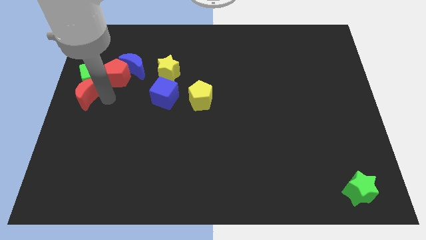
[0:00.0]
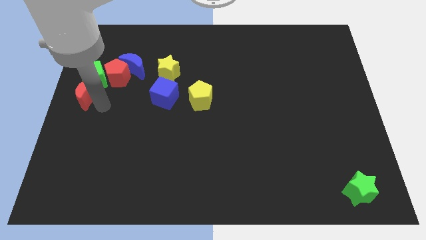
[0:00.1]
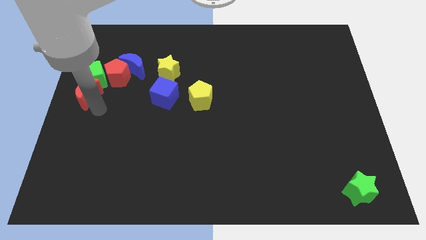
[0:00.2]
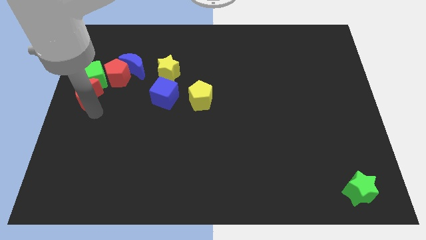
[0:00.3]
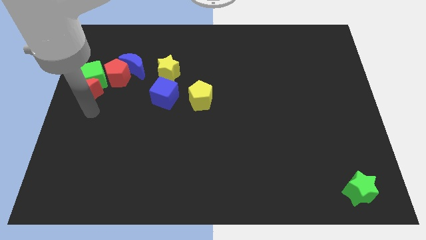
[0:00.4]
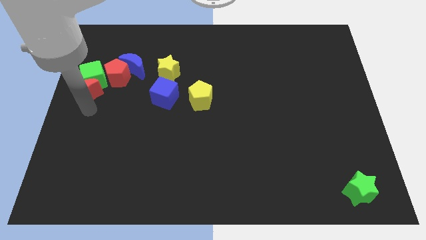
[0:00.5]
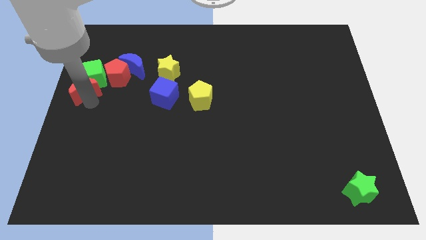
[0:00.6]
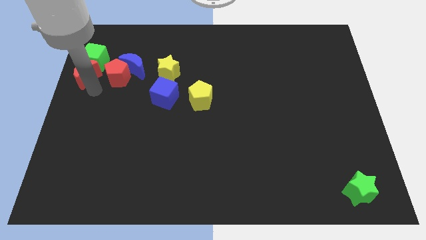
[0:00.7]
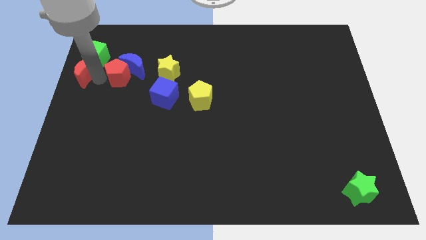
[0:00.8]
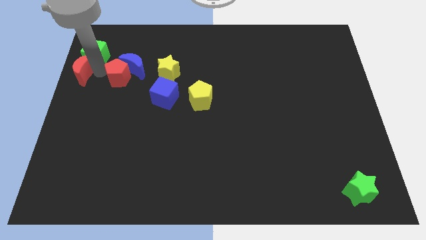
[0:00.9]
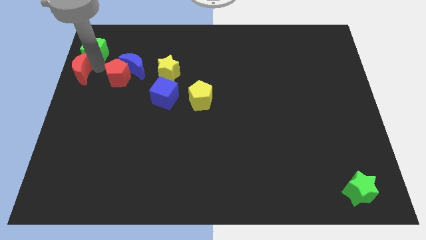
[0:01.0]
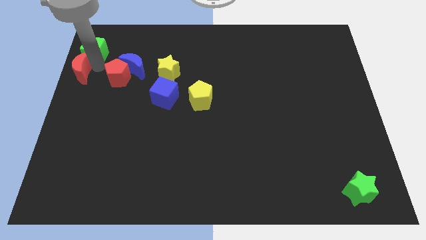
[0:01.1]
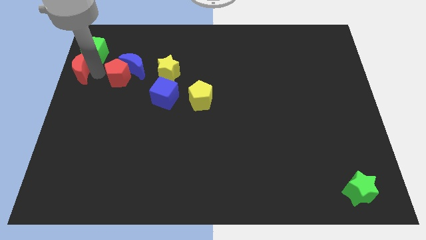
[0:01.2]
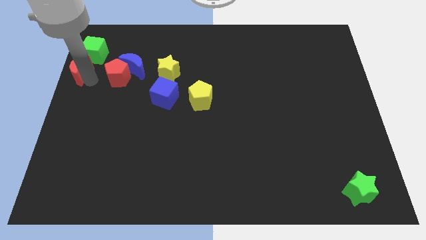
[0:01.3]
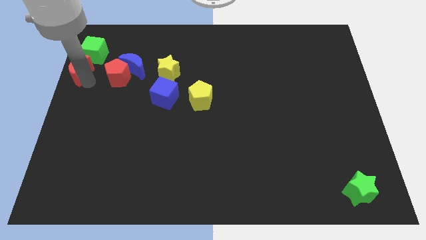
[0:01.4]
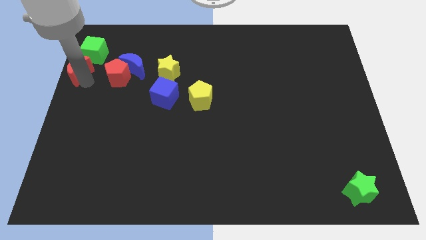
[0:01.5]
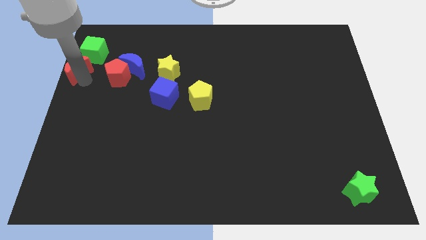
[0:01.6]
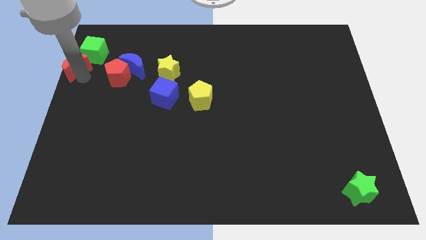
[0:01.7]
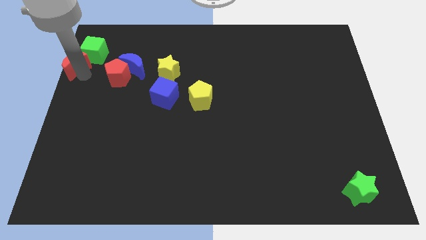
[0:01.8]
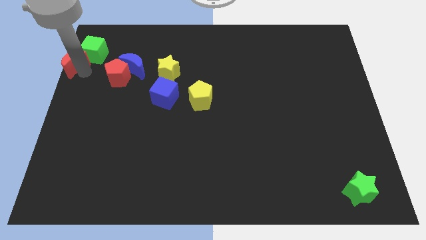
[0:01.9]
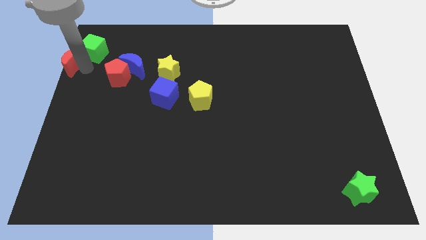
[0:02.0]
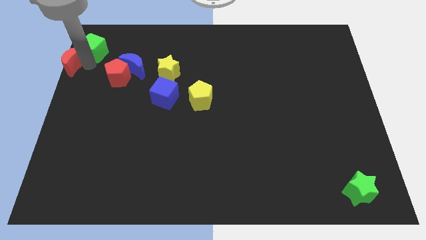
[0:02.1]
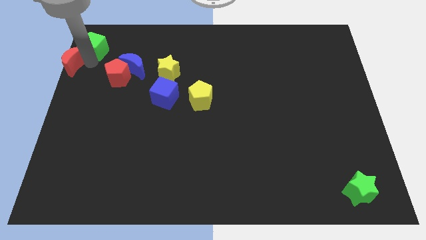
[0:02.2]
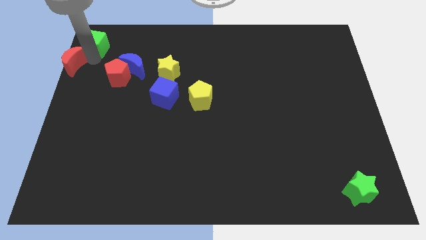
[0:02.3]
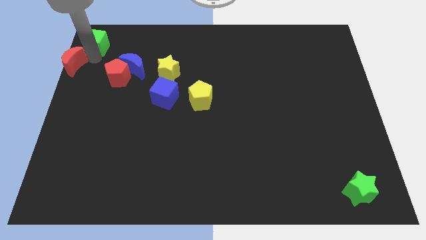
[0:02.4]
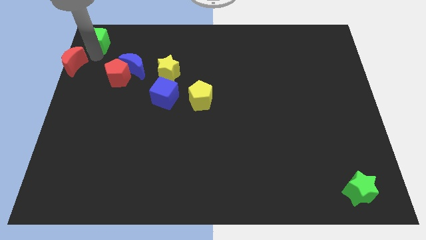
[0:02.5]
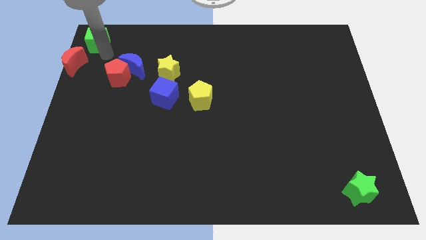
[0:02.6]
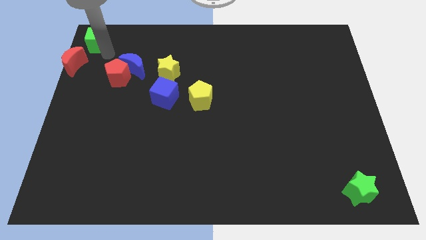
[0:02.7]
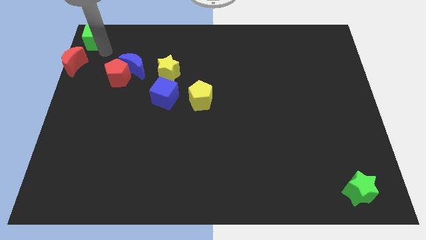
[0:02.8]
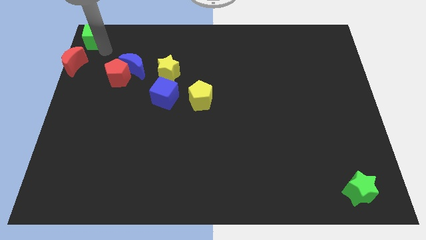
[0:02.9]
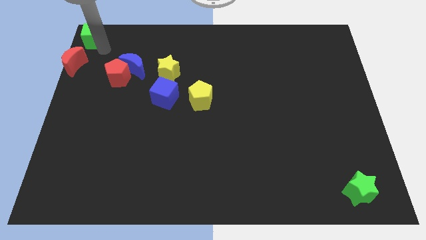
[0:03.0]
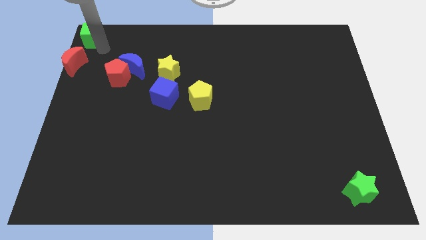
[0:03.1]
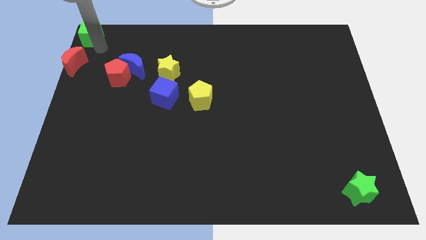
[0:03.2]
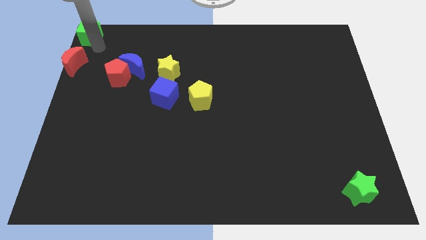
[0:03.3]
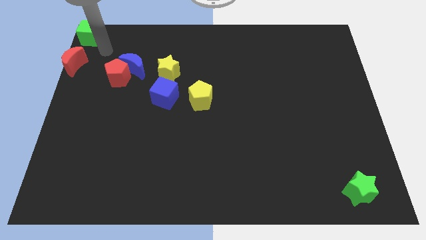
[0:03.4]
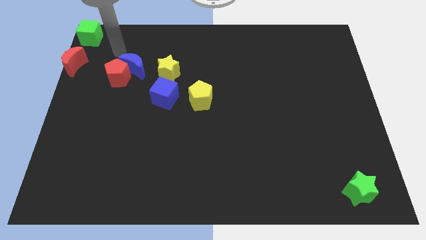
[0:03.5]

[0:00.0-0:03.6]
separate the green cube from the red moon

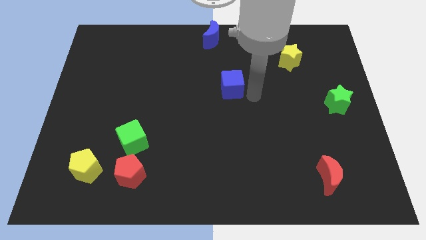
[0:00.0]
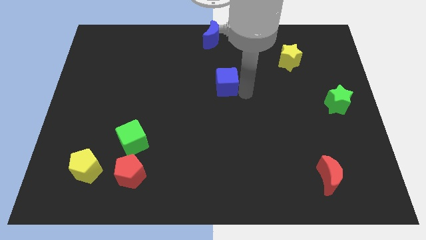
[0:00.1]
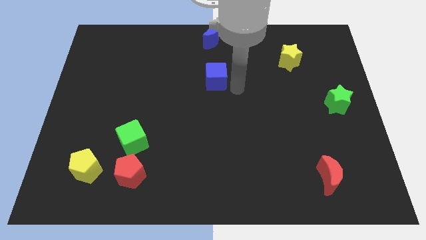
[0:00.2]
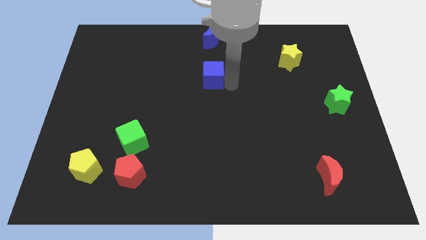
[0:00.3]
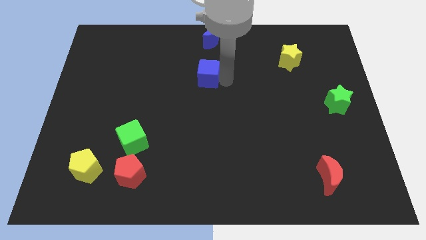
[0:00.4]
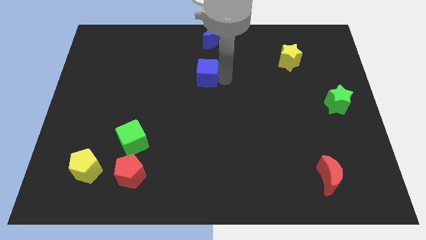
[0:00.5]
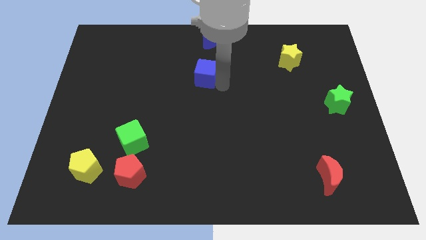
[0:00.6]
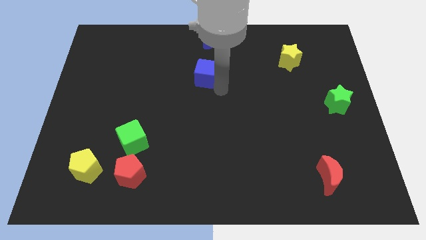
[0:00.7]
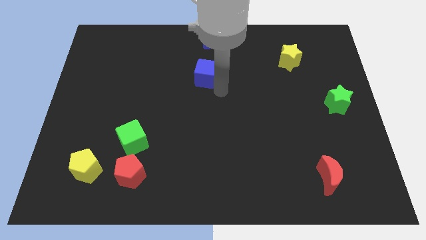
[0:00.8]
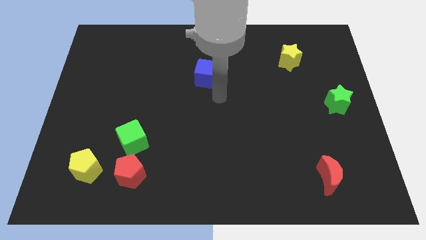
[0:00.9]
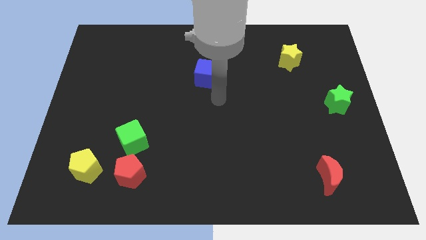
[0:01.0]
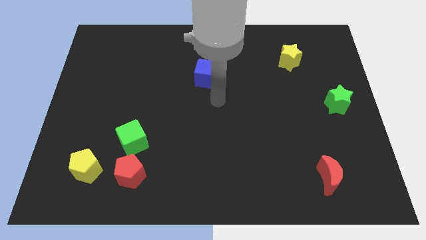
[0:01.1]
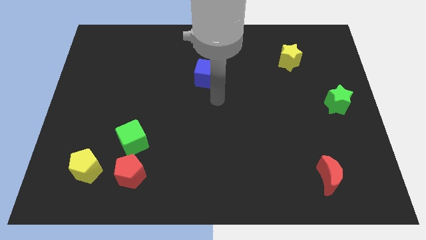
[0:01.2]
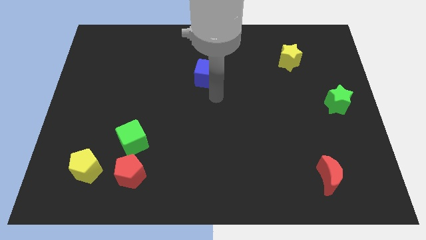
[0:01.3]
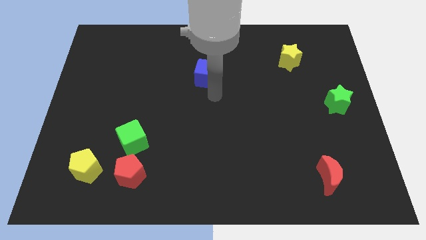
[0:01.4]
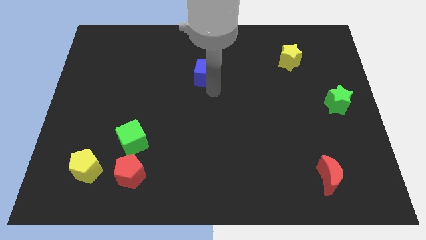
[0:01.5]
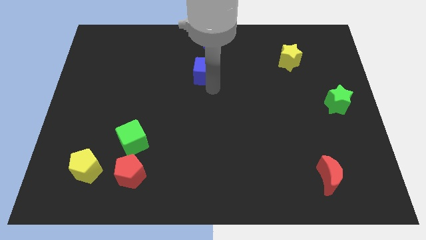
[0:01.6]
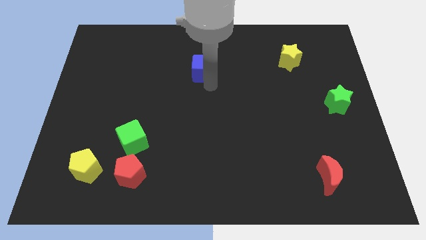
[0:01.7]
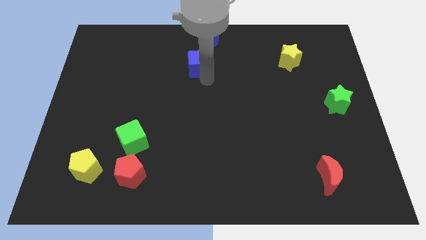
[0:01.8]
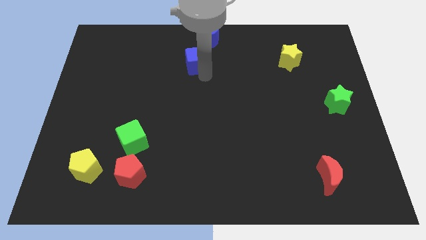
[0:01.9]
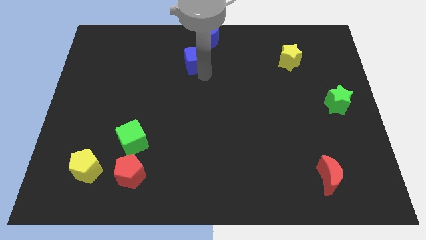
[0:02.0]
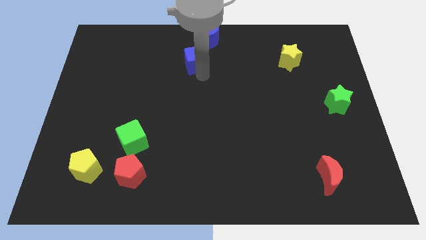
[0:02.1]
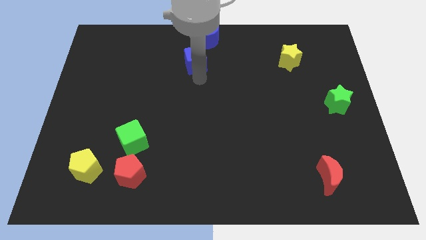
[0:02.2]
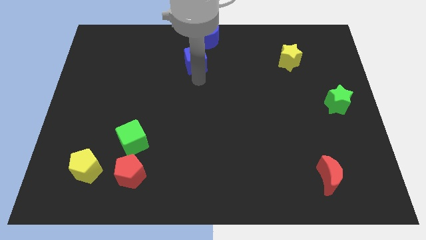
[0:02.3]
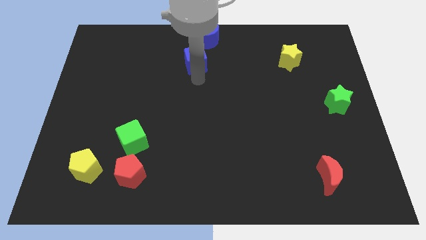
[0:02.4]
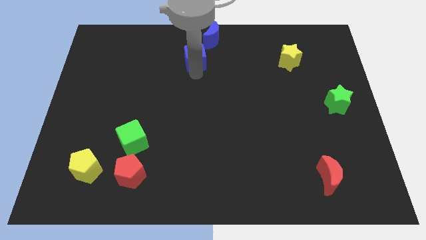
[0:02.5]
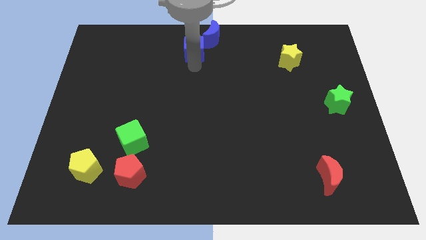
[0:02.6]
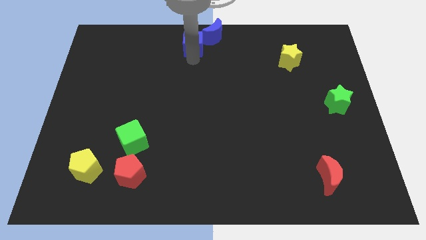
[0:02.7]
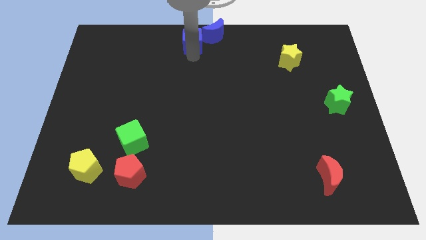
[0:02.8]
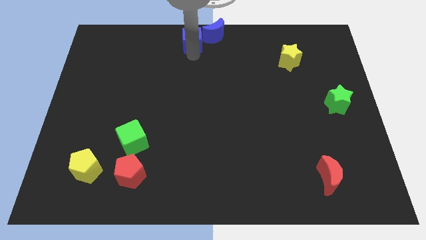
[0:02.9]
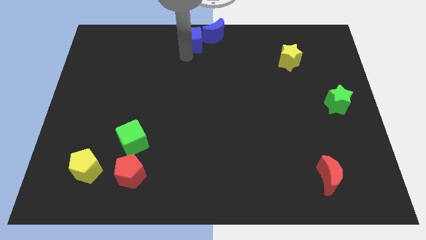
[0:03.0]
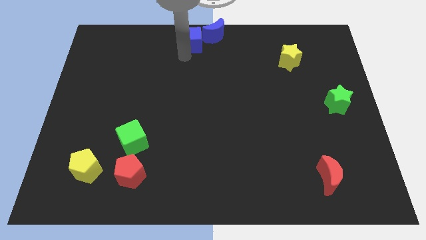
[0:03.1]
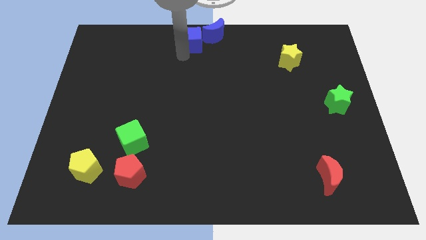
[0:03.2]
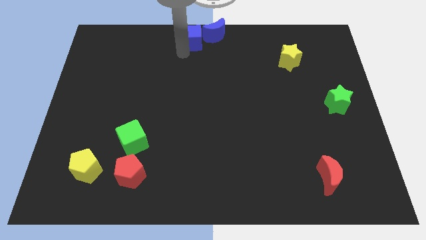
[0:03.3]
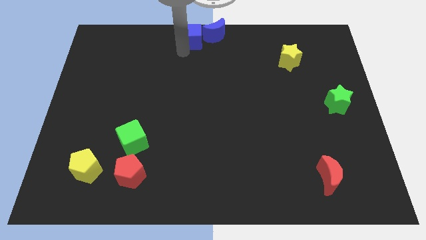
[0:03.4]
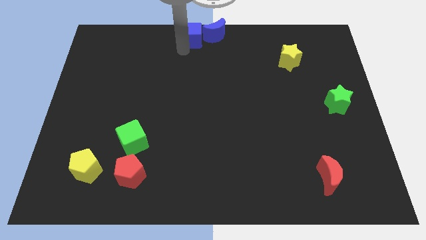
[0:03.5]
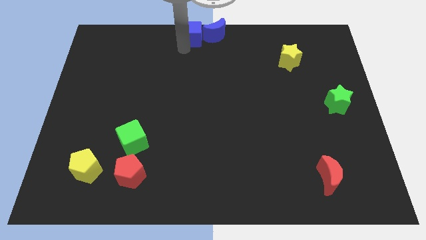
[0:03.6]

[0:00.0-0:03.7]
place the blue cube near the blue moon

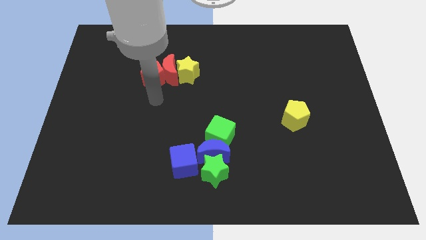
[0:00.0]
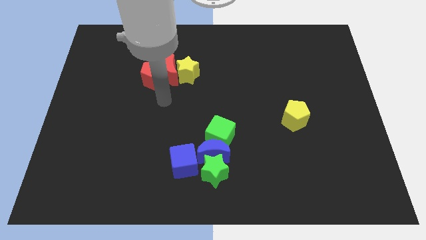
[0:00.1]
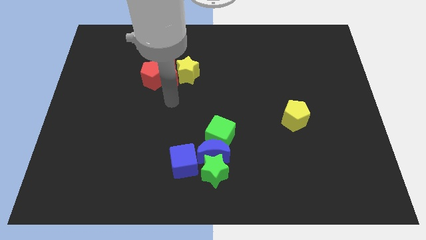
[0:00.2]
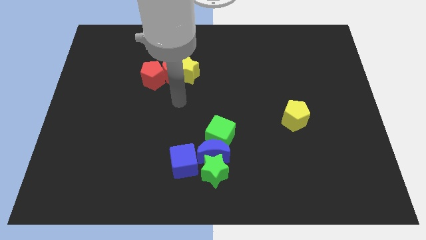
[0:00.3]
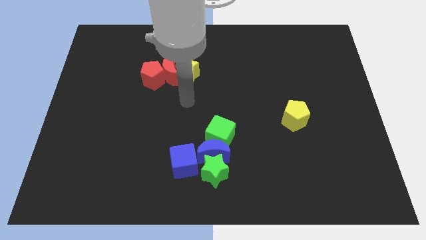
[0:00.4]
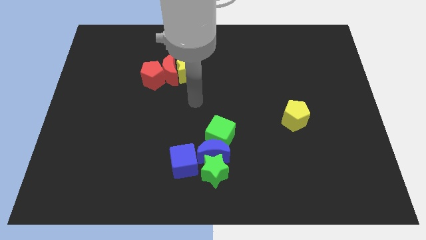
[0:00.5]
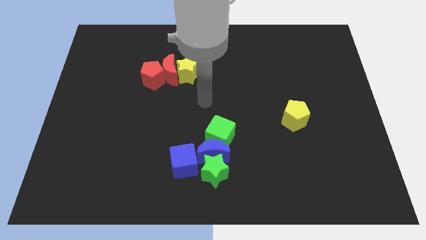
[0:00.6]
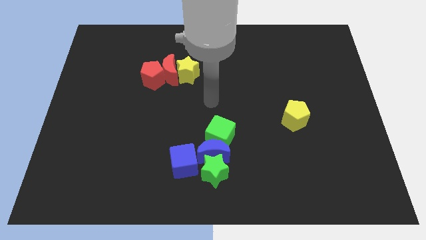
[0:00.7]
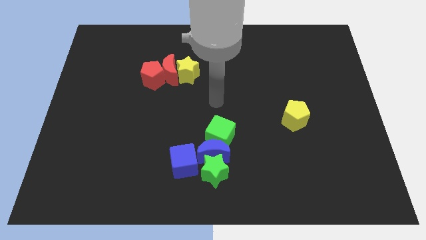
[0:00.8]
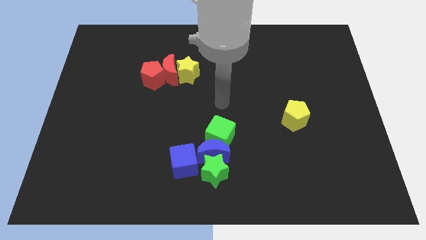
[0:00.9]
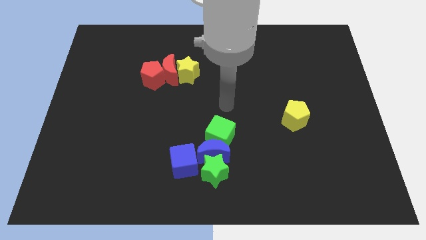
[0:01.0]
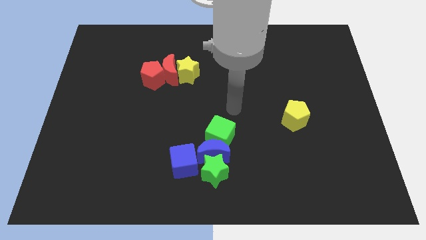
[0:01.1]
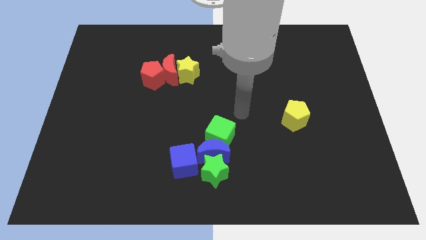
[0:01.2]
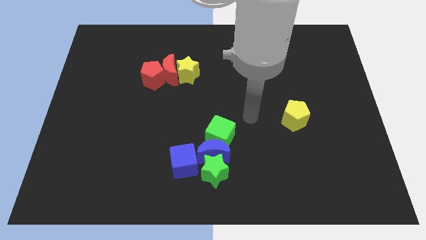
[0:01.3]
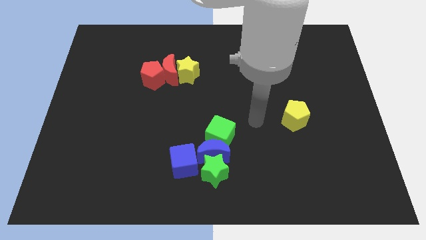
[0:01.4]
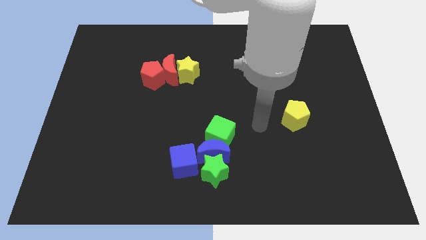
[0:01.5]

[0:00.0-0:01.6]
move your arm in between the yellow pentagon and green cube
